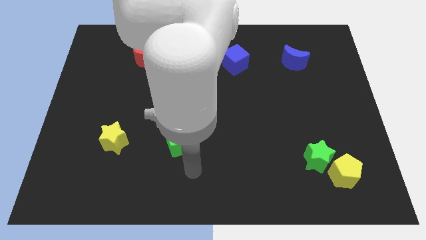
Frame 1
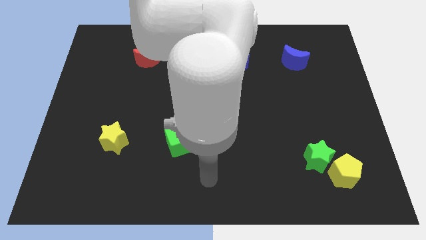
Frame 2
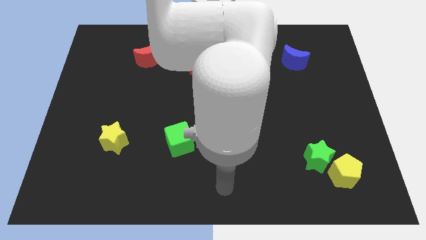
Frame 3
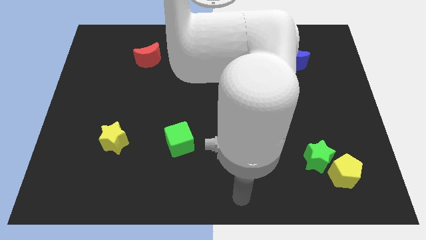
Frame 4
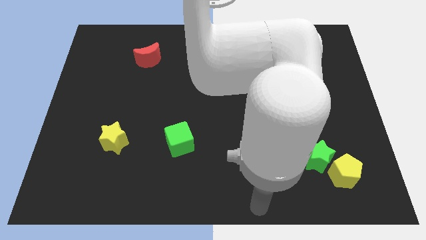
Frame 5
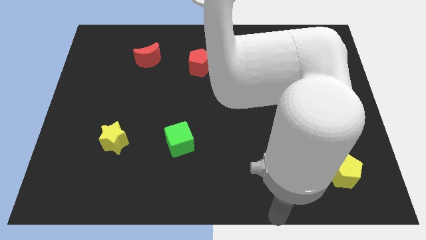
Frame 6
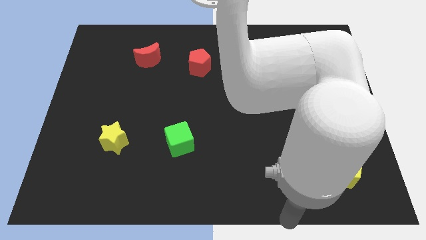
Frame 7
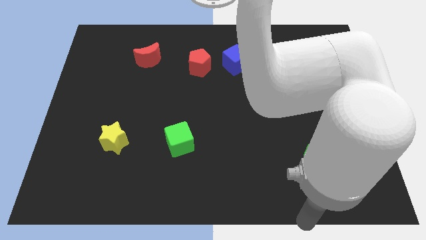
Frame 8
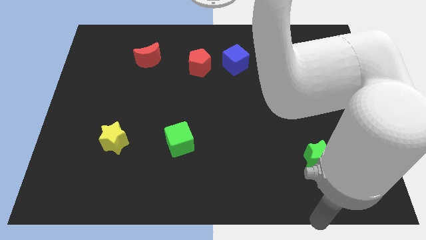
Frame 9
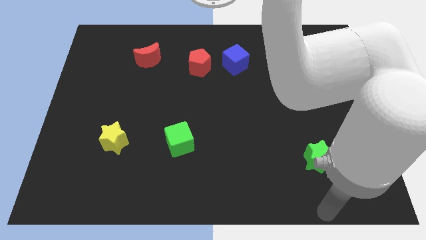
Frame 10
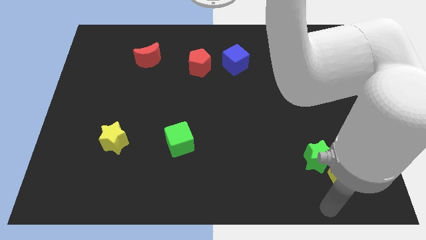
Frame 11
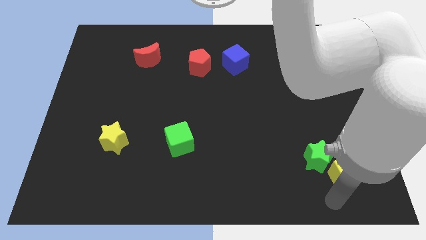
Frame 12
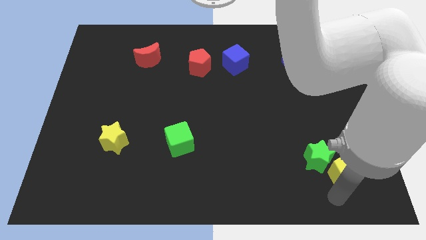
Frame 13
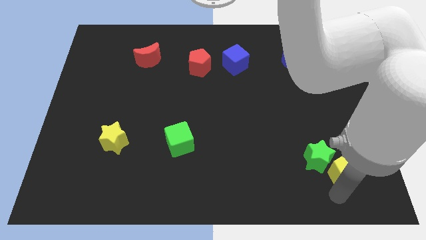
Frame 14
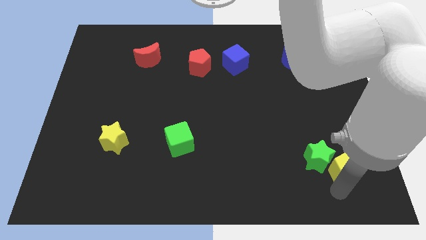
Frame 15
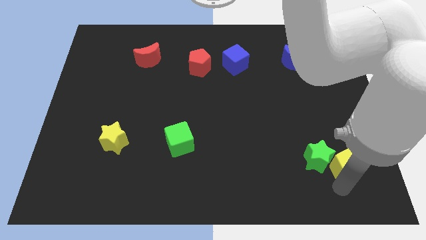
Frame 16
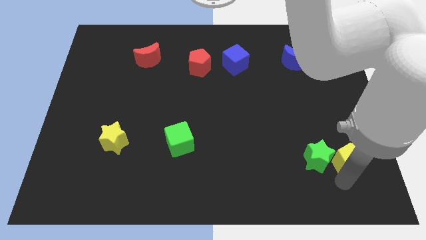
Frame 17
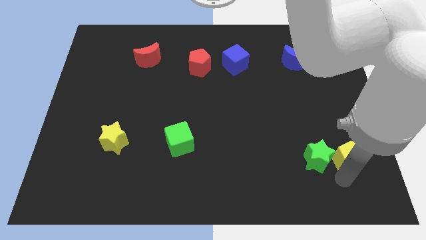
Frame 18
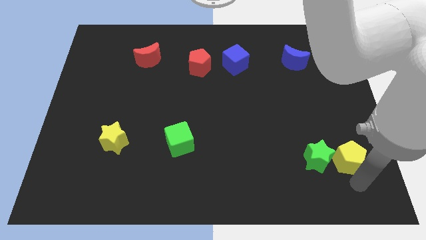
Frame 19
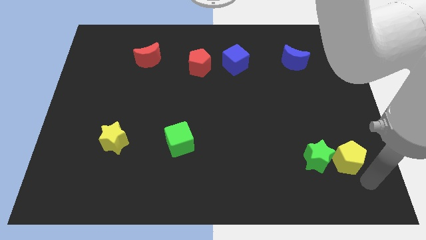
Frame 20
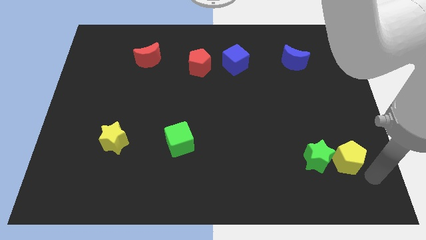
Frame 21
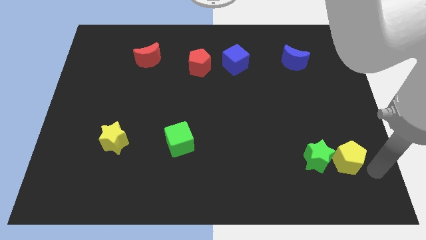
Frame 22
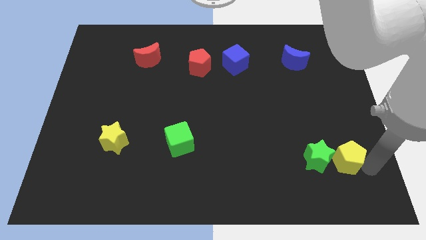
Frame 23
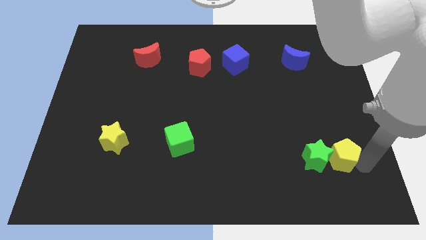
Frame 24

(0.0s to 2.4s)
move the yellow pentagon to the right of green star

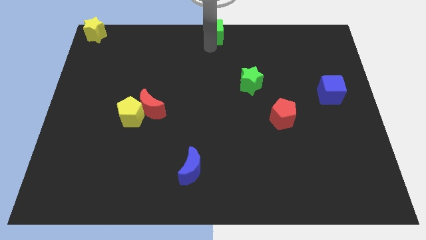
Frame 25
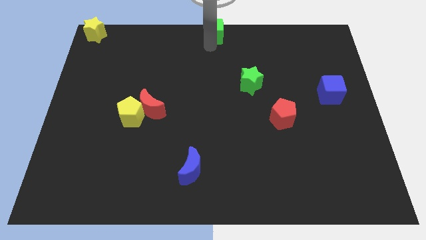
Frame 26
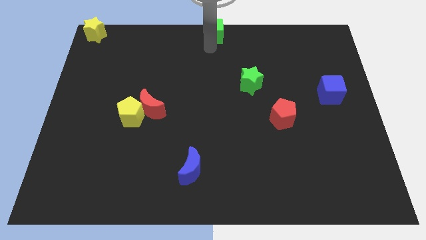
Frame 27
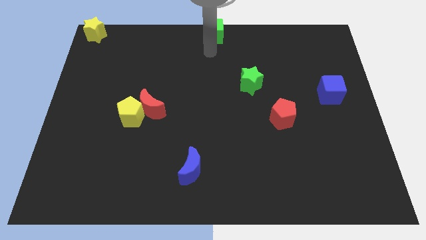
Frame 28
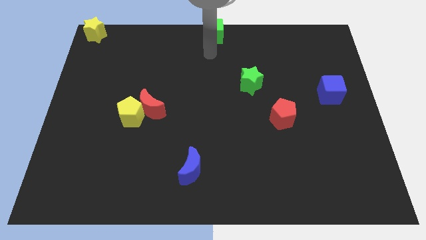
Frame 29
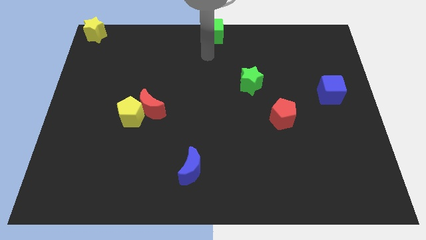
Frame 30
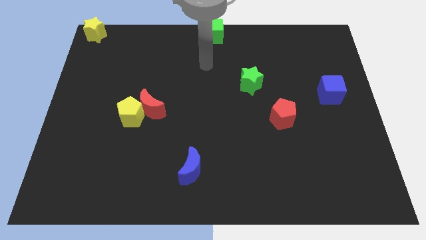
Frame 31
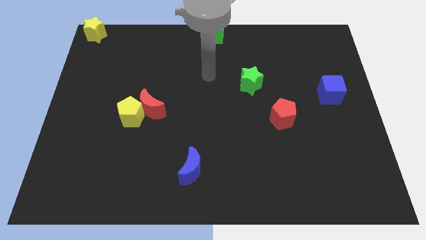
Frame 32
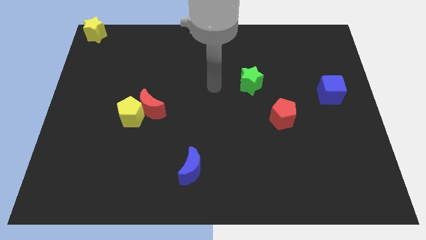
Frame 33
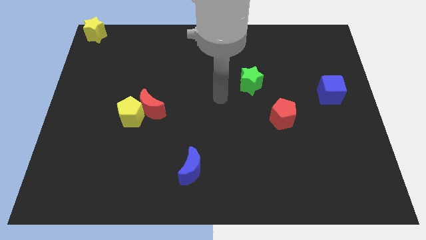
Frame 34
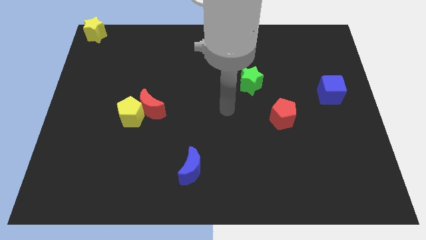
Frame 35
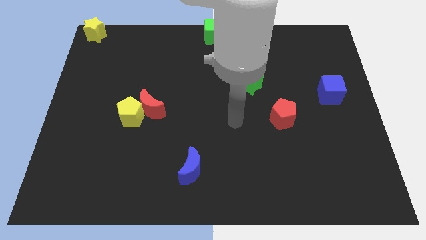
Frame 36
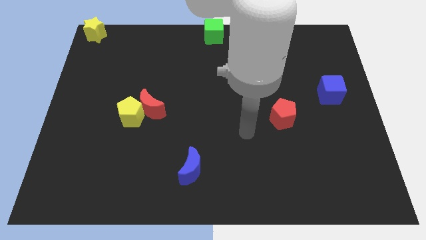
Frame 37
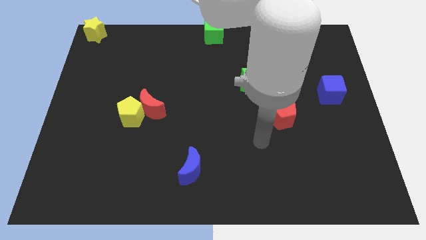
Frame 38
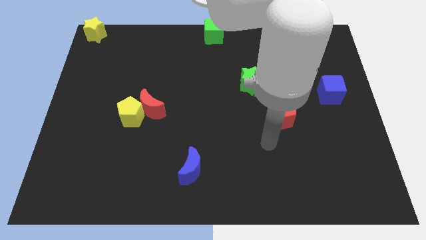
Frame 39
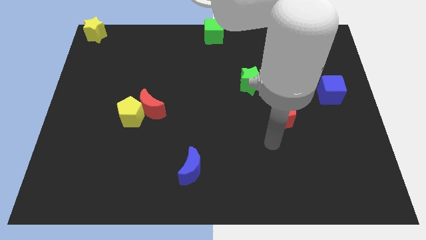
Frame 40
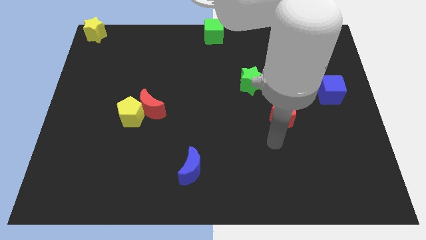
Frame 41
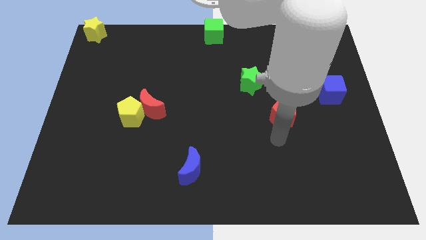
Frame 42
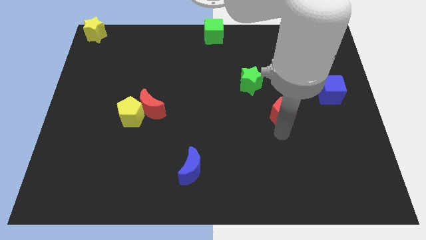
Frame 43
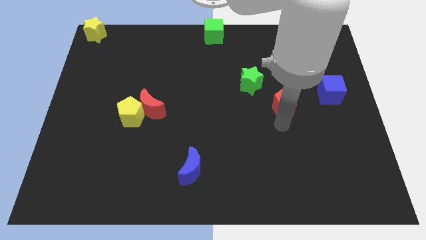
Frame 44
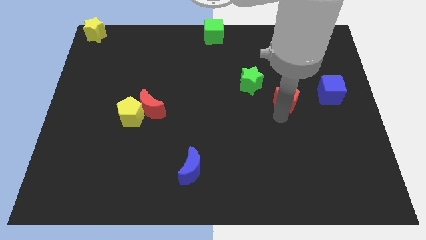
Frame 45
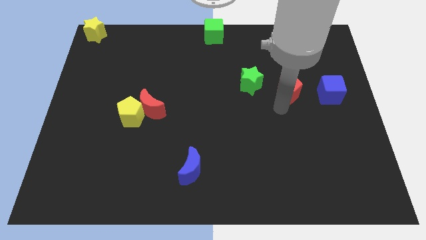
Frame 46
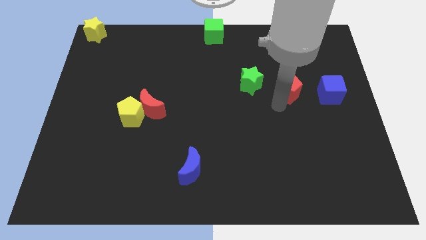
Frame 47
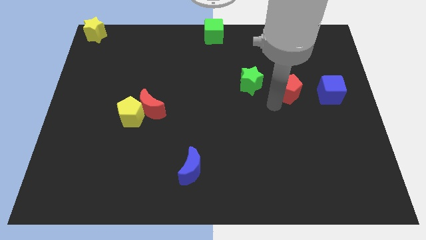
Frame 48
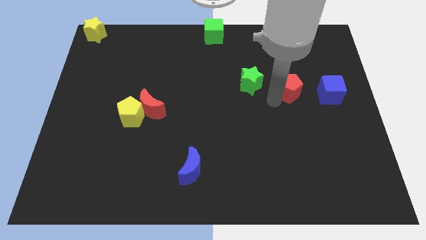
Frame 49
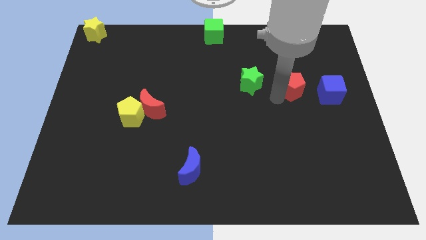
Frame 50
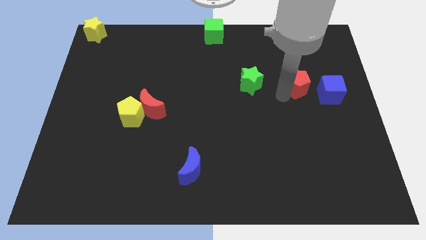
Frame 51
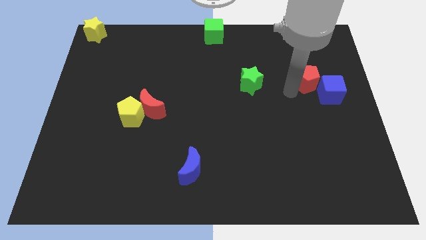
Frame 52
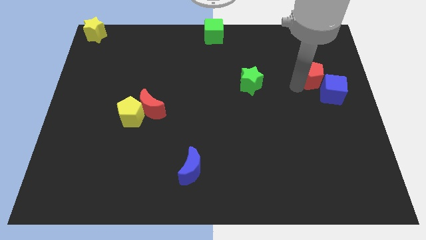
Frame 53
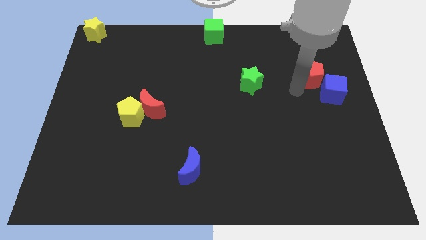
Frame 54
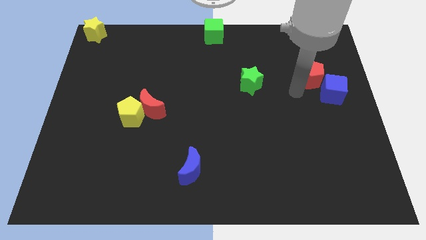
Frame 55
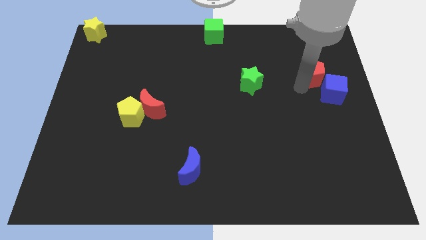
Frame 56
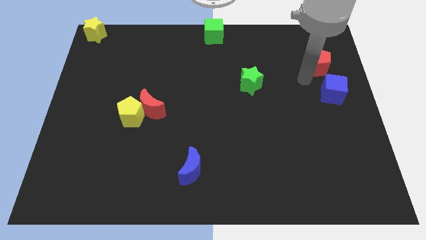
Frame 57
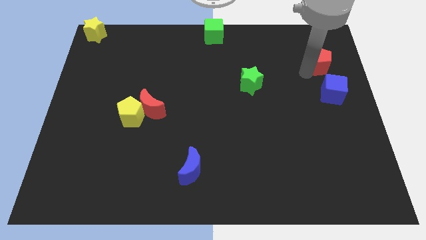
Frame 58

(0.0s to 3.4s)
place the red pentagon to the right center

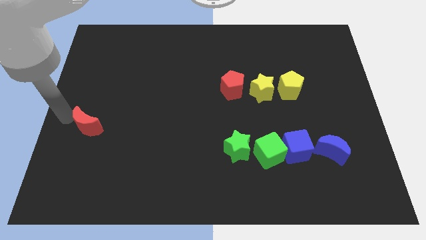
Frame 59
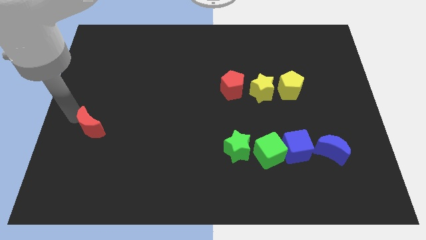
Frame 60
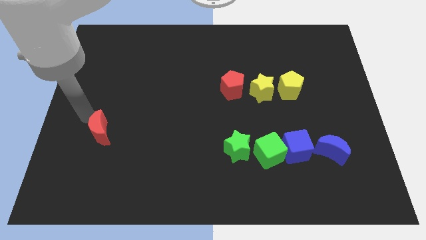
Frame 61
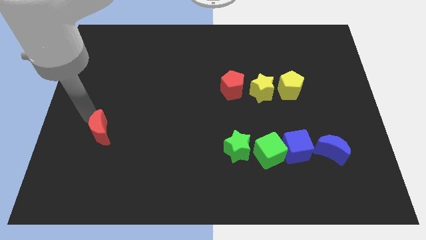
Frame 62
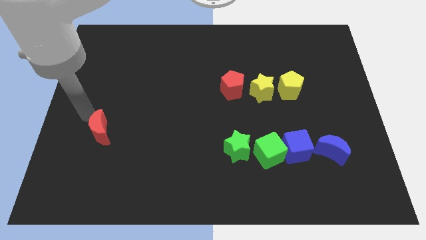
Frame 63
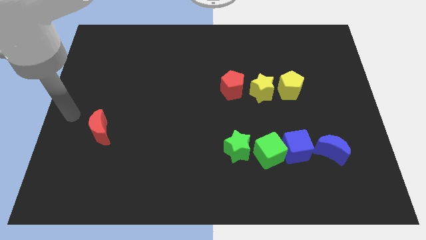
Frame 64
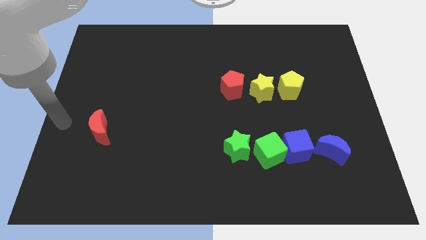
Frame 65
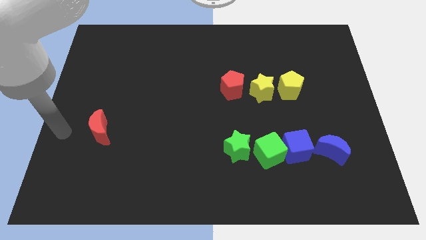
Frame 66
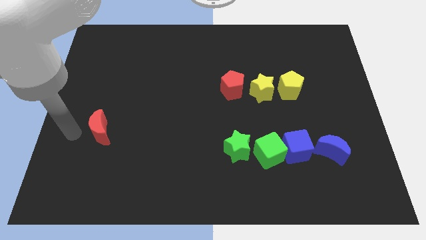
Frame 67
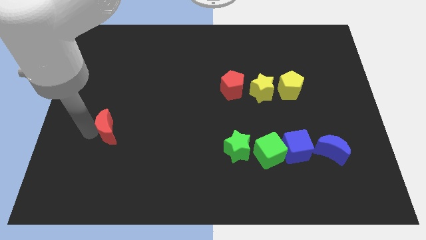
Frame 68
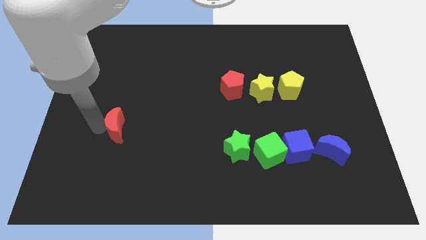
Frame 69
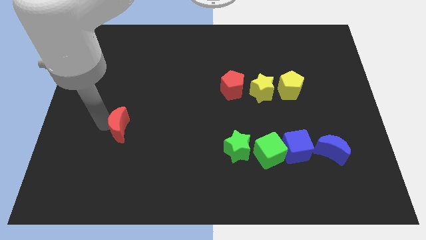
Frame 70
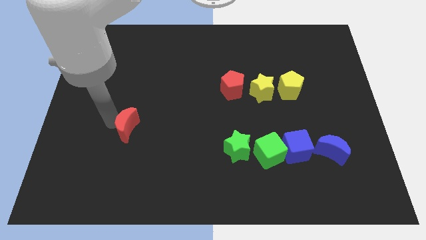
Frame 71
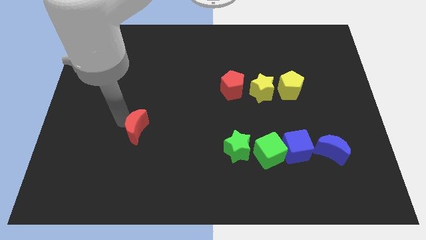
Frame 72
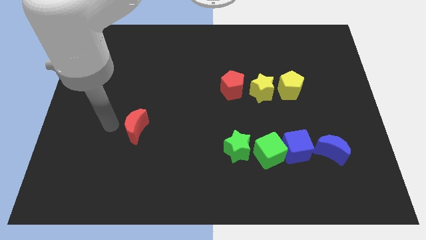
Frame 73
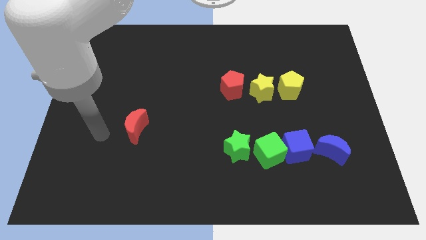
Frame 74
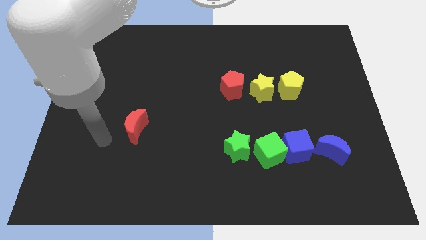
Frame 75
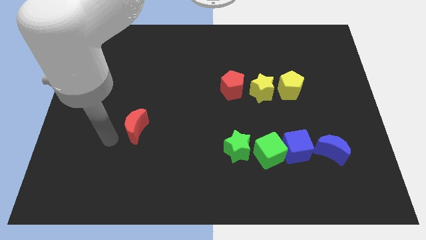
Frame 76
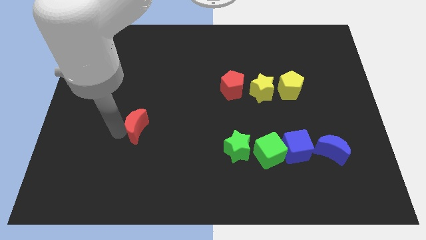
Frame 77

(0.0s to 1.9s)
slide the red crescent slightly to the right

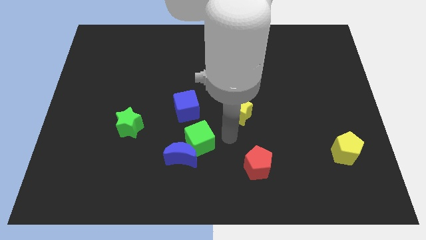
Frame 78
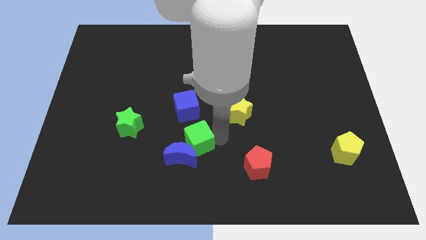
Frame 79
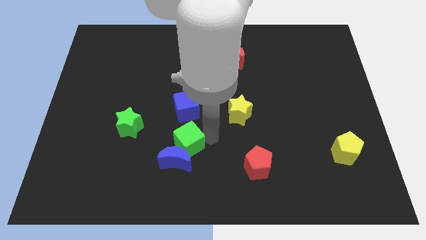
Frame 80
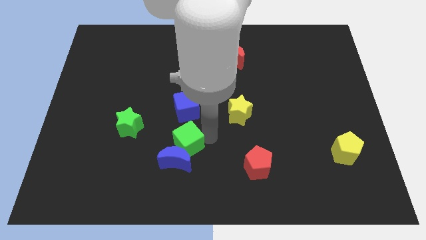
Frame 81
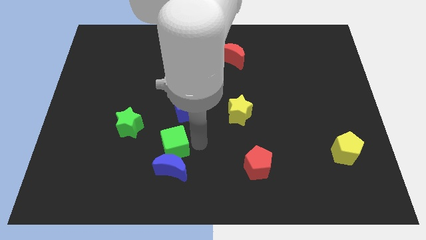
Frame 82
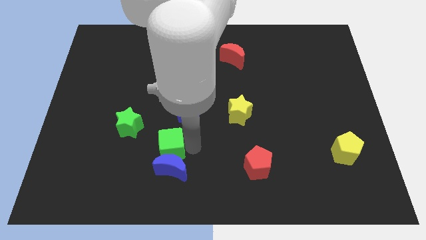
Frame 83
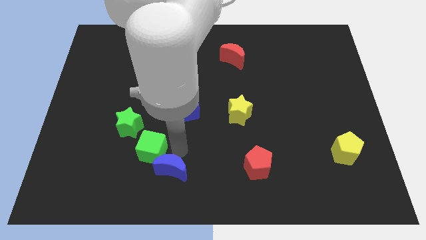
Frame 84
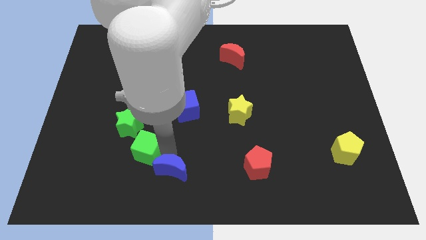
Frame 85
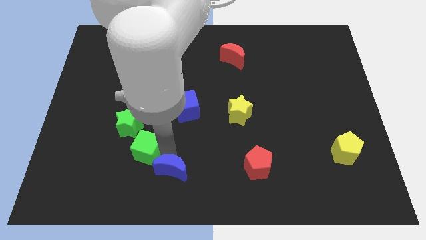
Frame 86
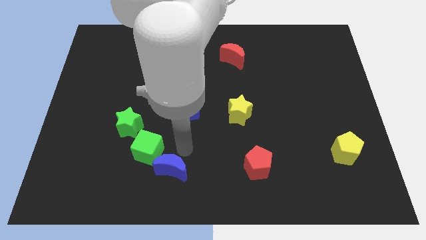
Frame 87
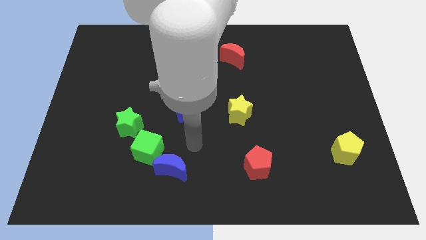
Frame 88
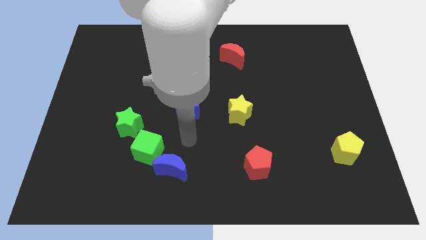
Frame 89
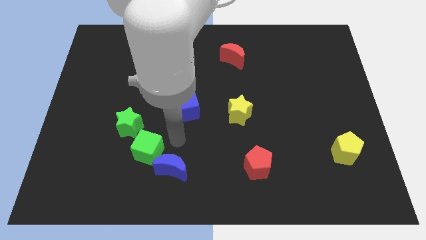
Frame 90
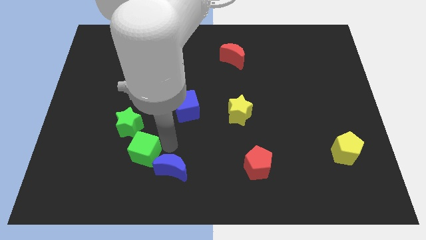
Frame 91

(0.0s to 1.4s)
place the green cube in between the green star and blue moon
